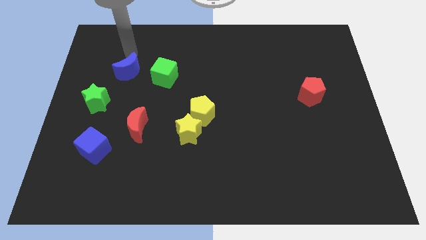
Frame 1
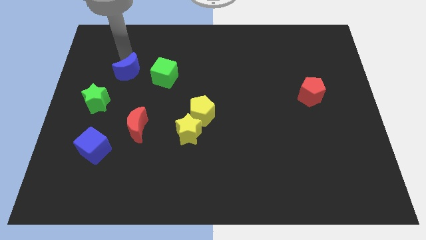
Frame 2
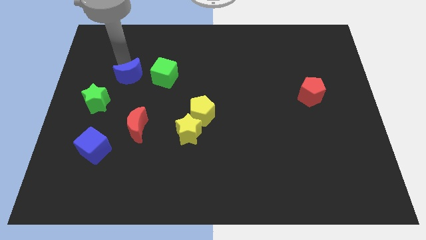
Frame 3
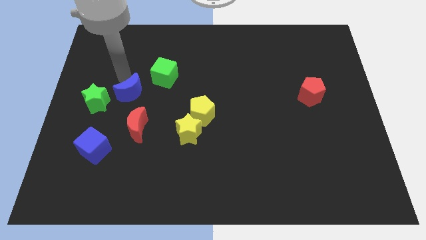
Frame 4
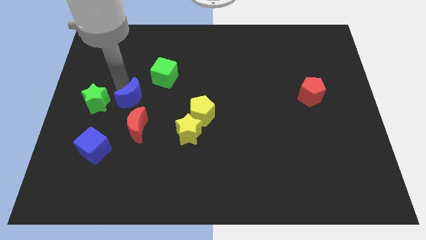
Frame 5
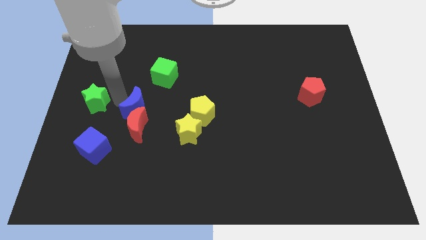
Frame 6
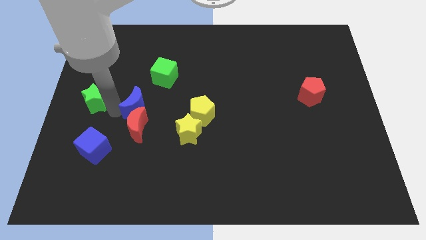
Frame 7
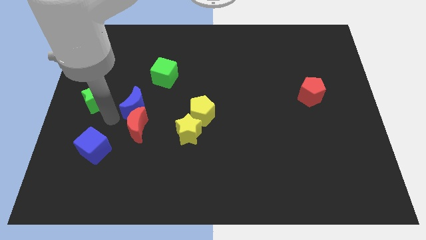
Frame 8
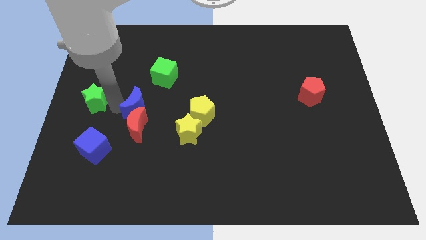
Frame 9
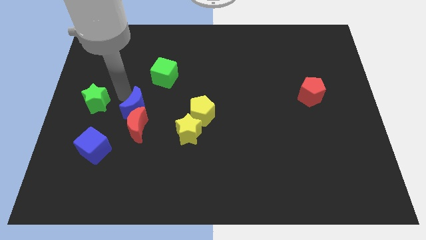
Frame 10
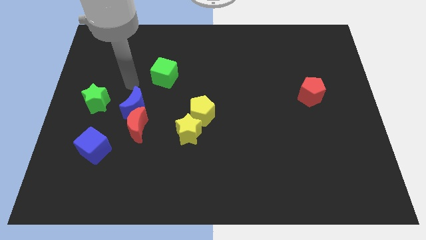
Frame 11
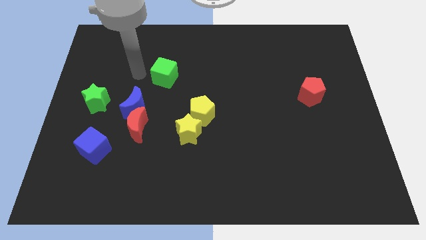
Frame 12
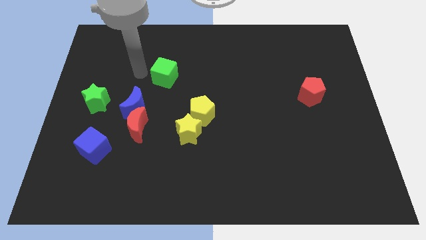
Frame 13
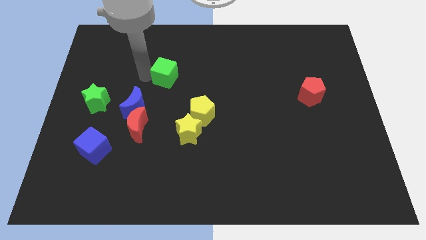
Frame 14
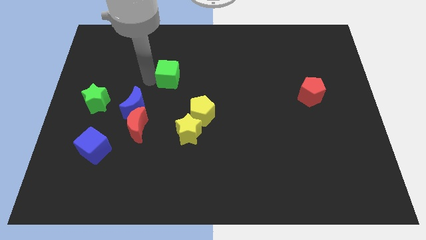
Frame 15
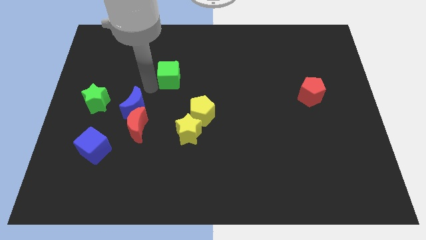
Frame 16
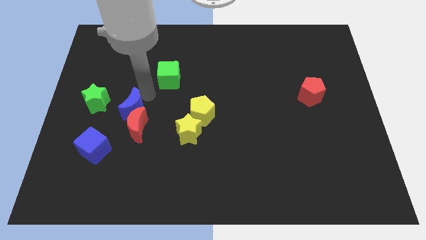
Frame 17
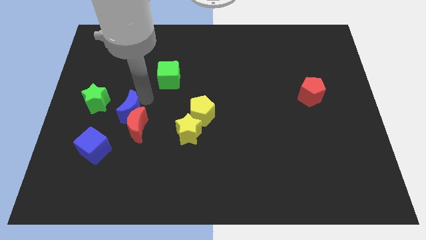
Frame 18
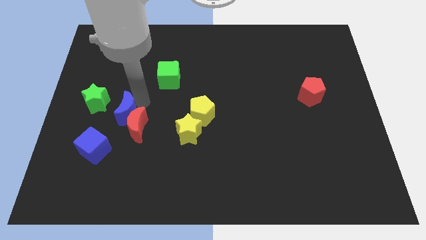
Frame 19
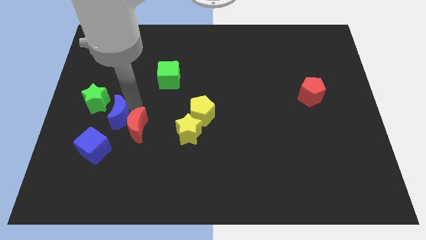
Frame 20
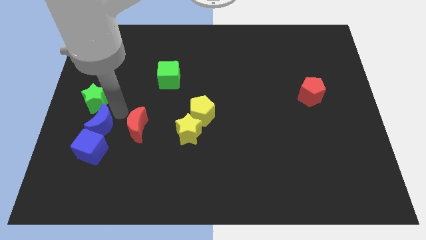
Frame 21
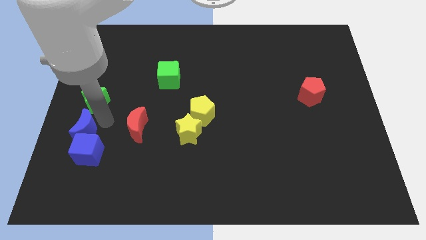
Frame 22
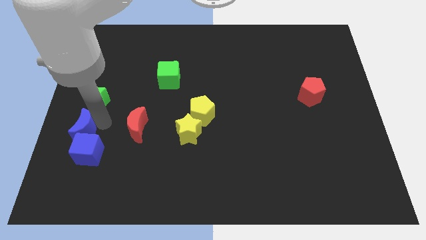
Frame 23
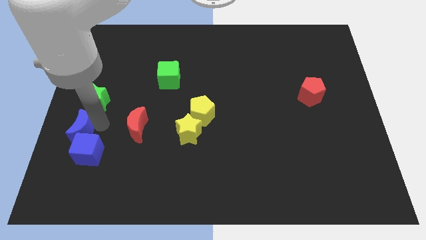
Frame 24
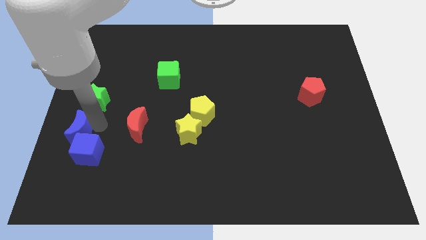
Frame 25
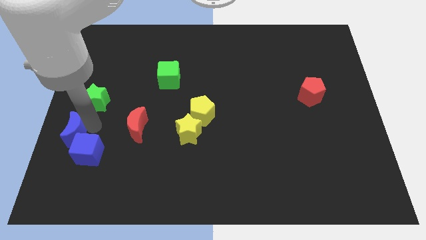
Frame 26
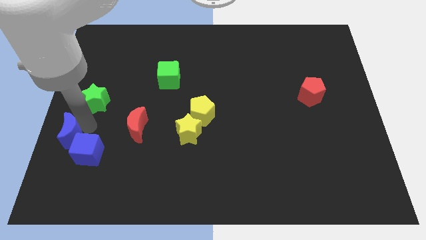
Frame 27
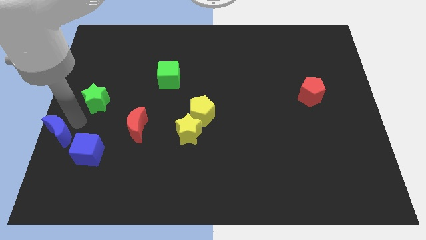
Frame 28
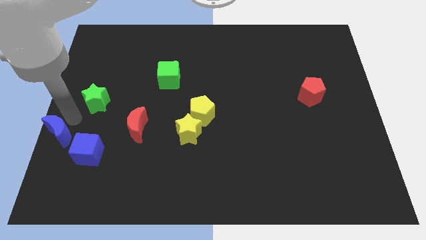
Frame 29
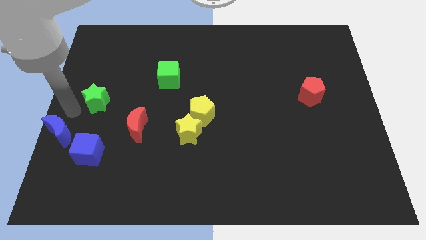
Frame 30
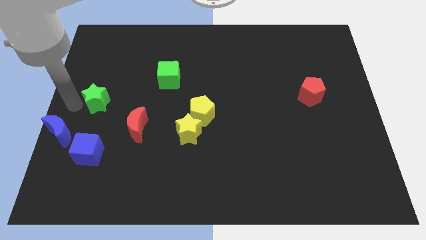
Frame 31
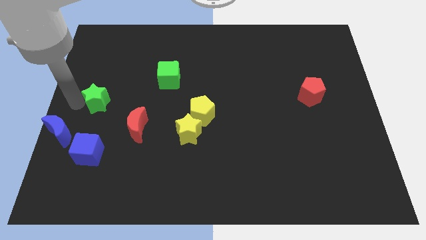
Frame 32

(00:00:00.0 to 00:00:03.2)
push the blue moon center on the left side of the board

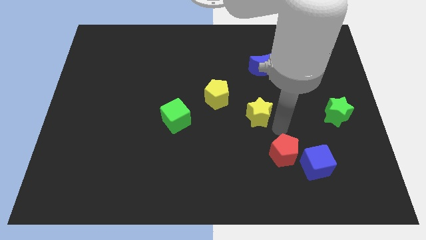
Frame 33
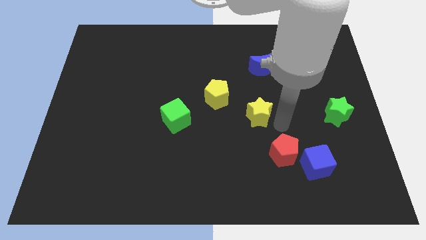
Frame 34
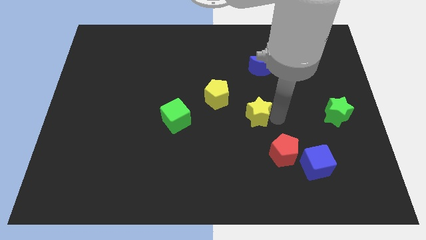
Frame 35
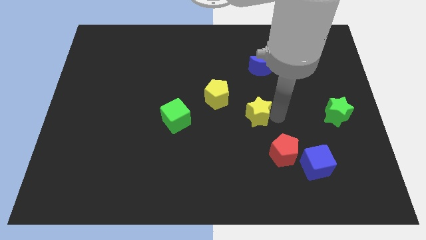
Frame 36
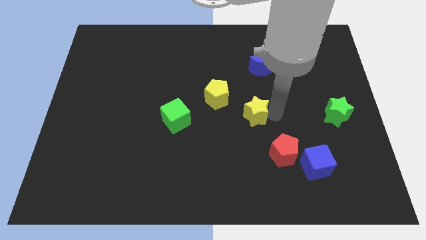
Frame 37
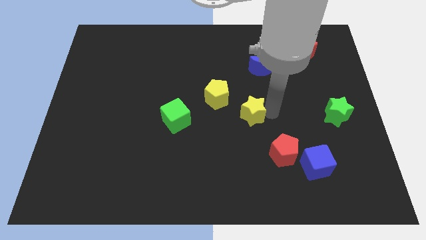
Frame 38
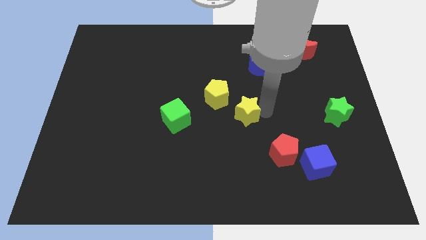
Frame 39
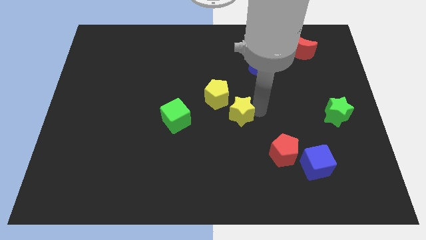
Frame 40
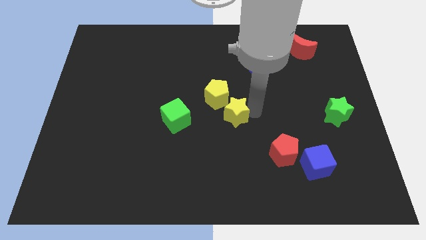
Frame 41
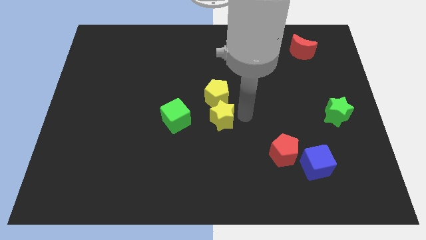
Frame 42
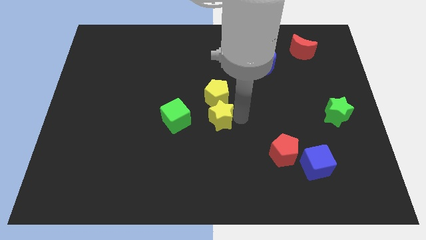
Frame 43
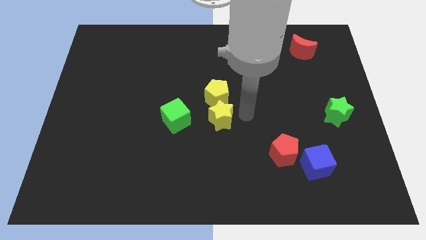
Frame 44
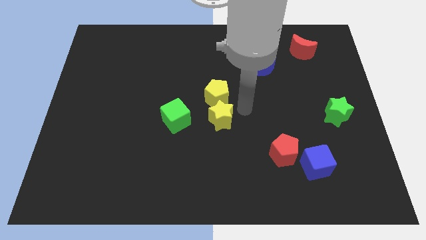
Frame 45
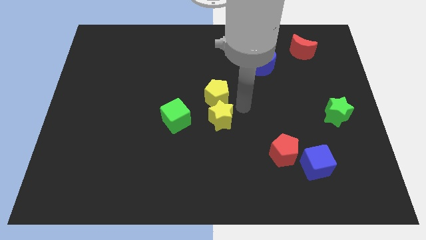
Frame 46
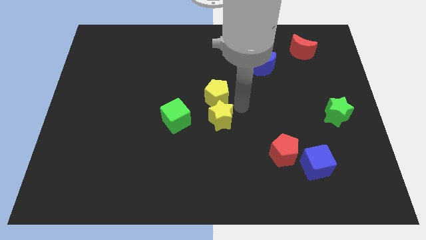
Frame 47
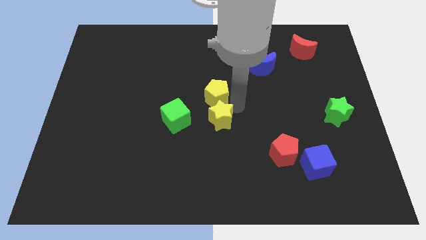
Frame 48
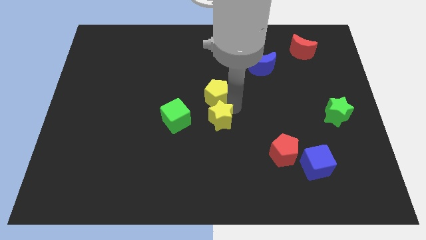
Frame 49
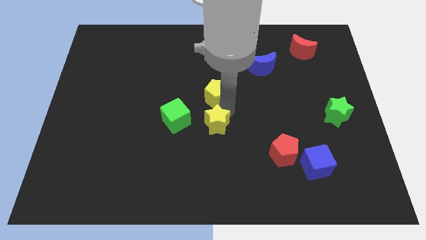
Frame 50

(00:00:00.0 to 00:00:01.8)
push the yellow star to the bottom of the yellow pentagon

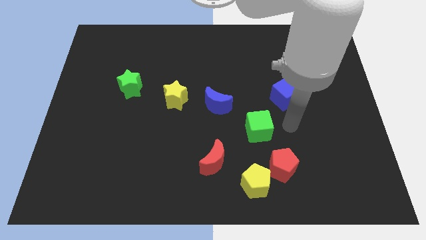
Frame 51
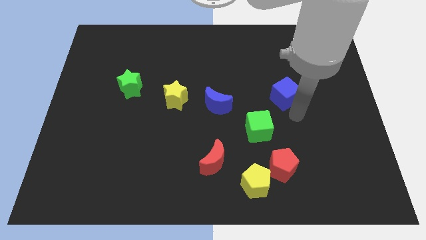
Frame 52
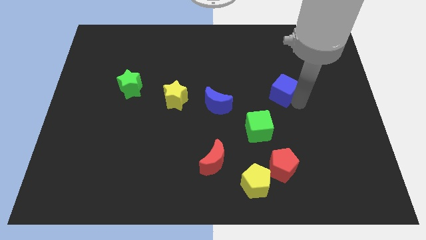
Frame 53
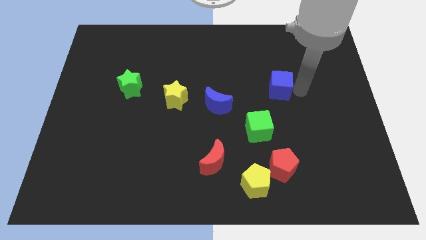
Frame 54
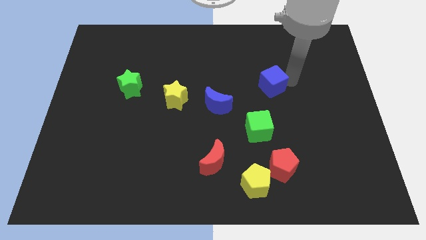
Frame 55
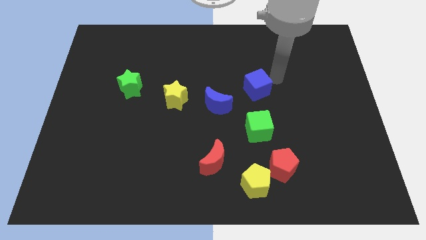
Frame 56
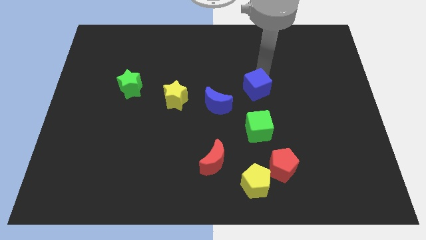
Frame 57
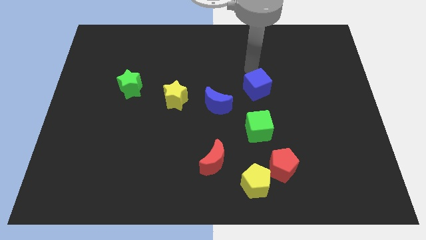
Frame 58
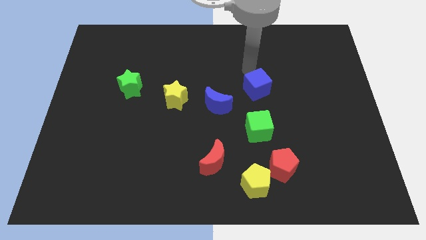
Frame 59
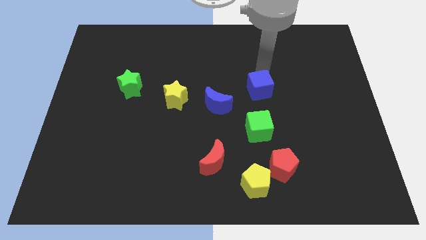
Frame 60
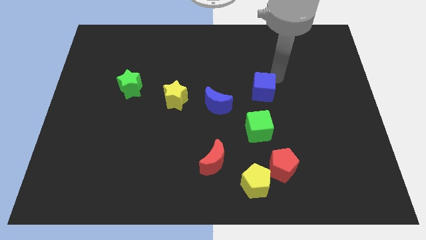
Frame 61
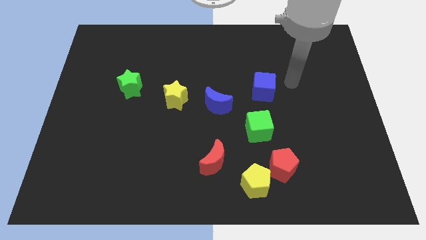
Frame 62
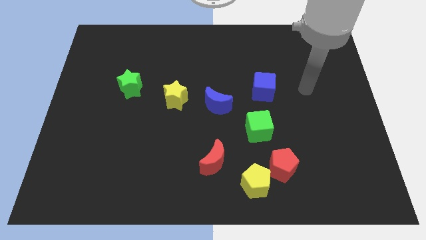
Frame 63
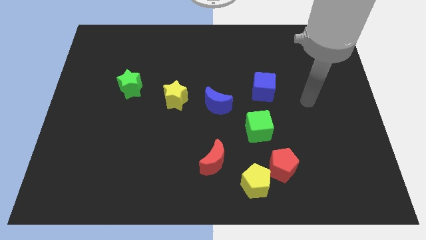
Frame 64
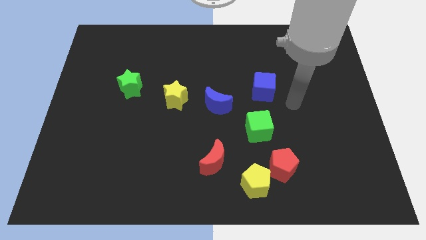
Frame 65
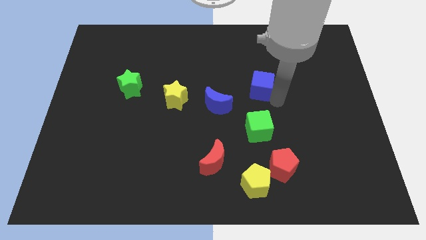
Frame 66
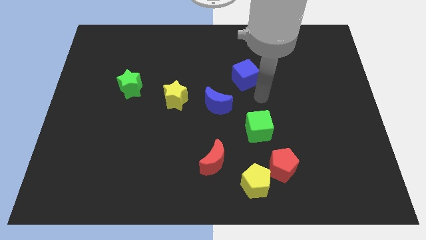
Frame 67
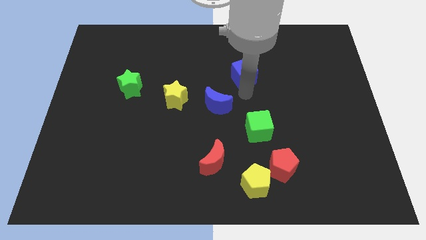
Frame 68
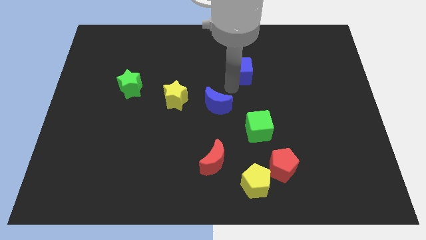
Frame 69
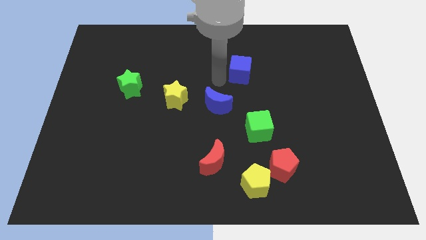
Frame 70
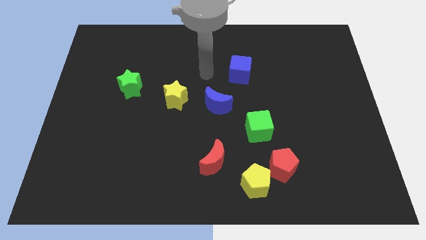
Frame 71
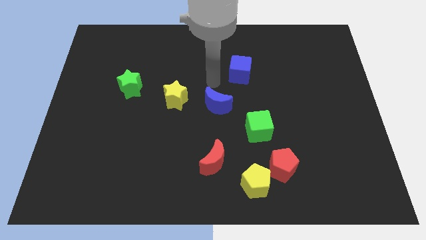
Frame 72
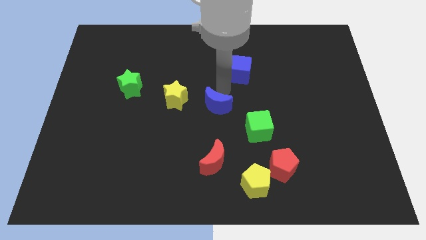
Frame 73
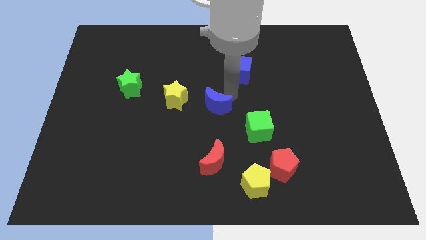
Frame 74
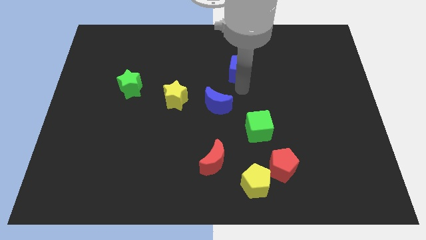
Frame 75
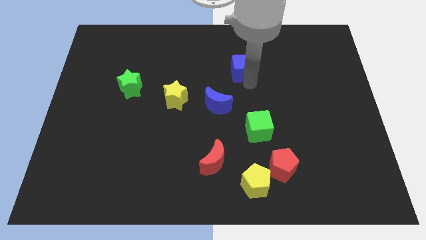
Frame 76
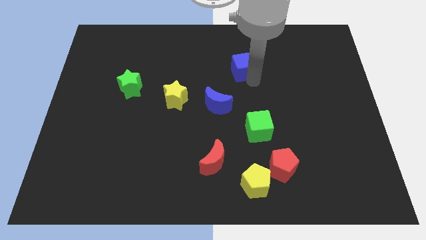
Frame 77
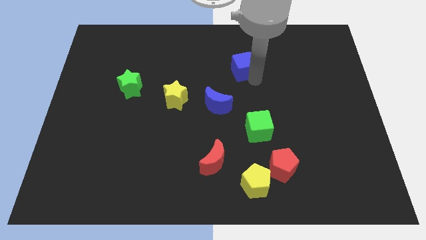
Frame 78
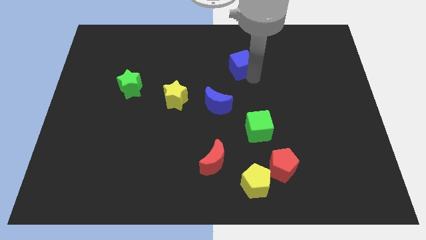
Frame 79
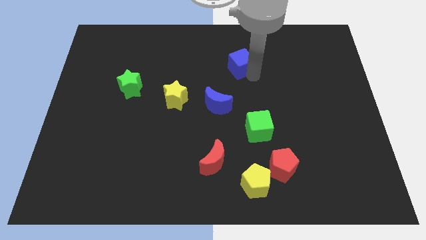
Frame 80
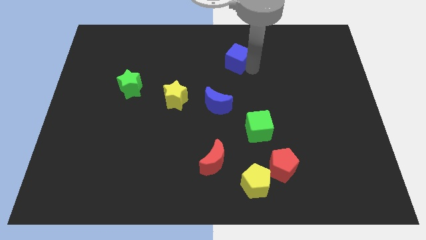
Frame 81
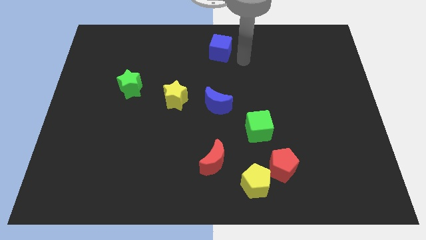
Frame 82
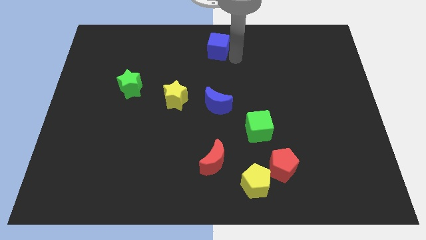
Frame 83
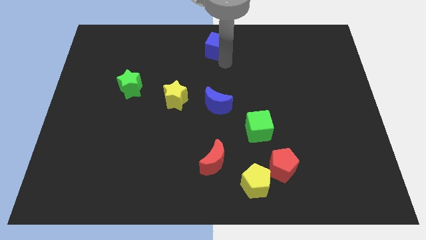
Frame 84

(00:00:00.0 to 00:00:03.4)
push the blue cube to the top center

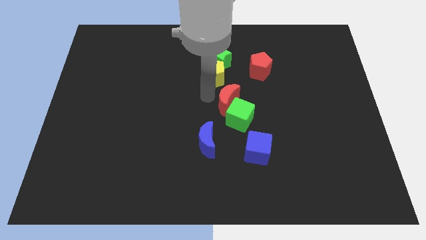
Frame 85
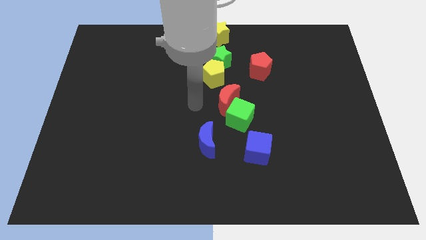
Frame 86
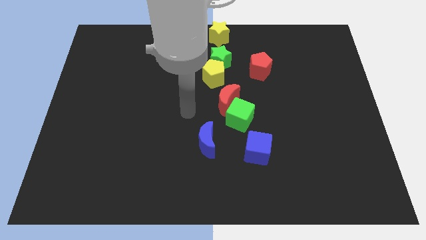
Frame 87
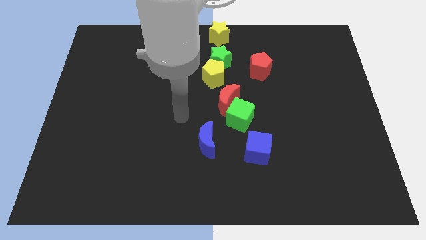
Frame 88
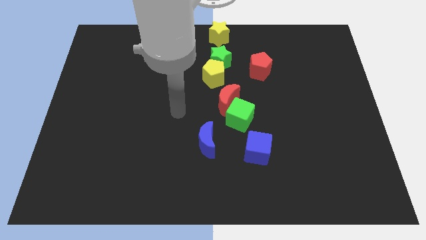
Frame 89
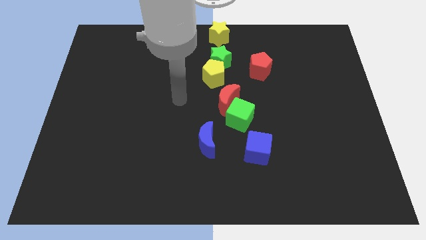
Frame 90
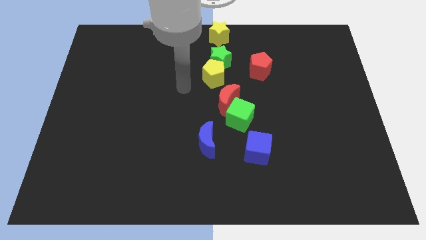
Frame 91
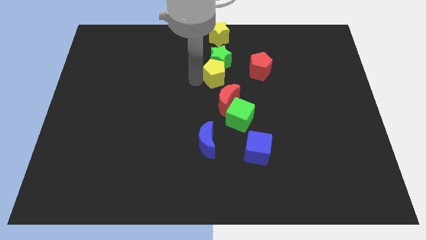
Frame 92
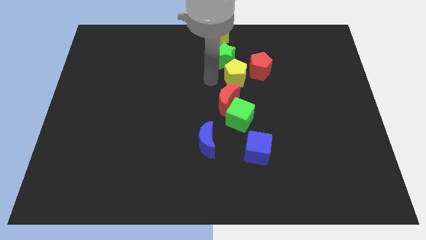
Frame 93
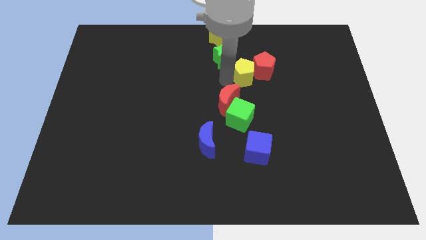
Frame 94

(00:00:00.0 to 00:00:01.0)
move the yellow pentagon into the red pentagon
